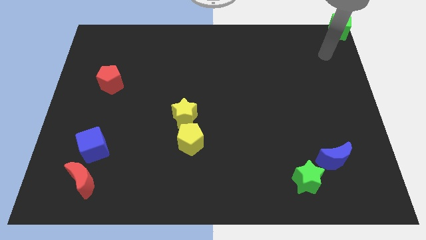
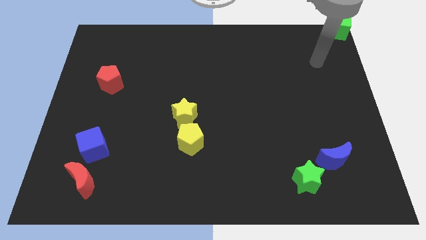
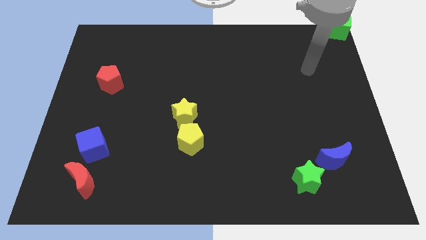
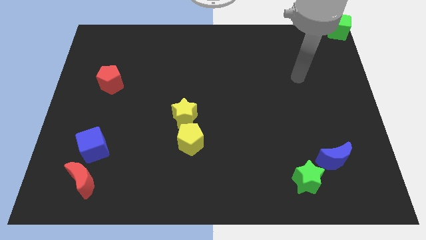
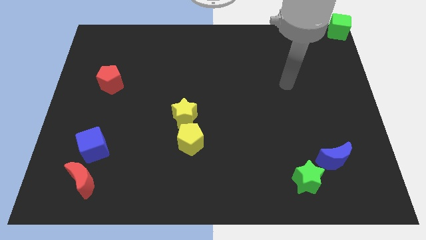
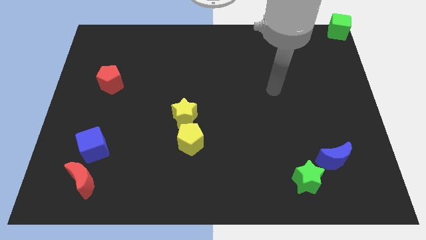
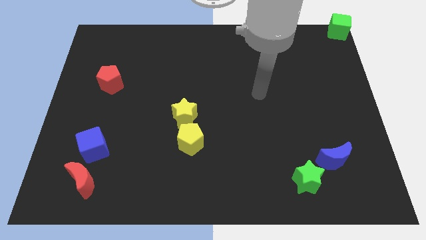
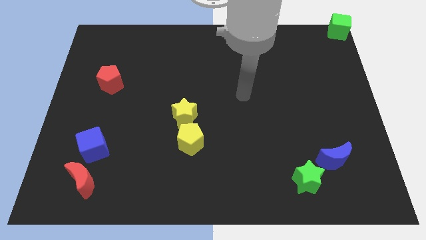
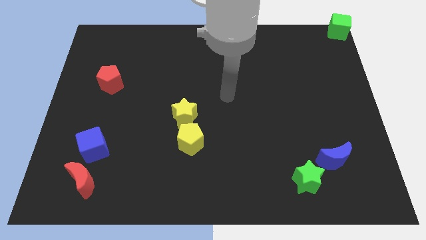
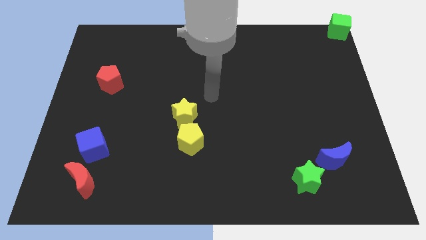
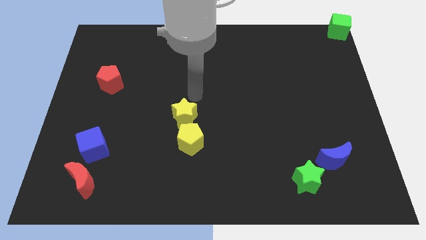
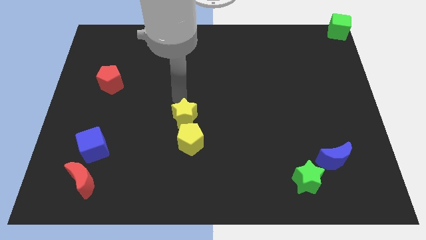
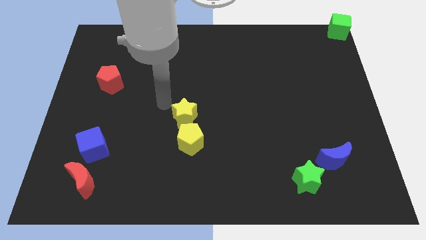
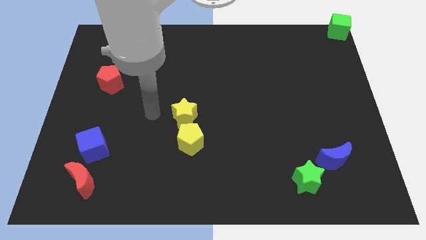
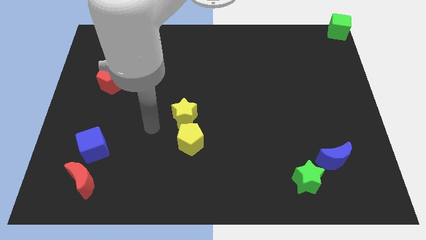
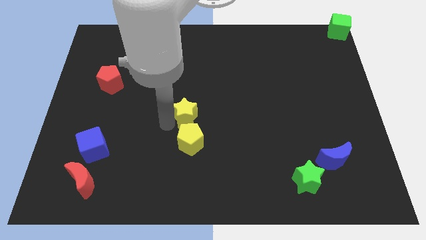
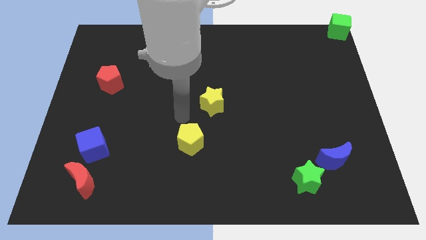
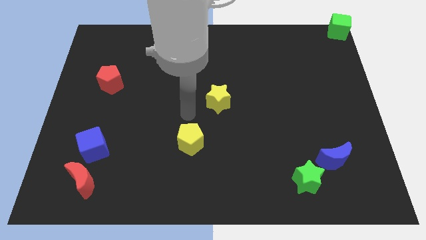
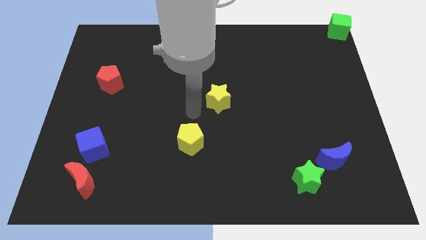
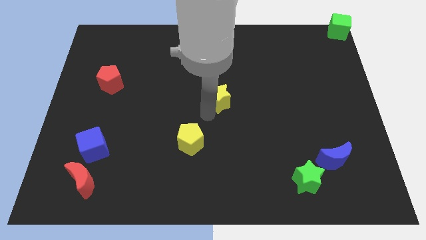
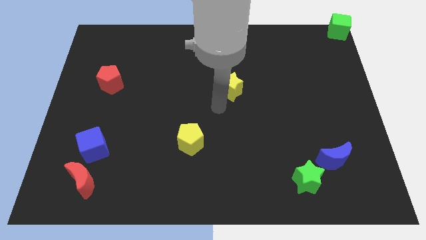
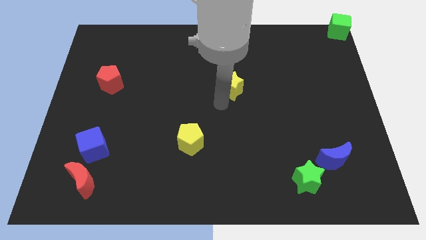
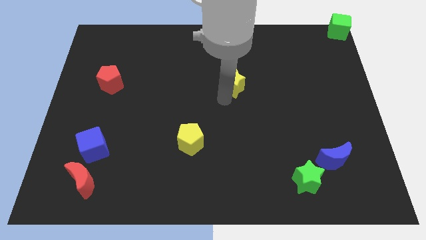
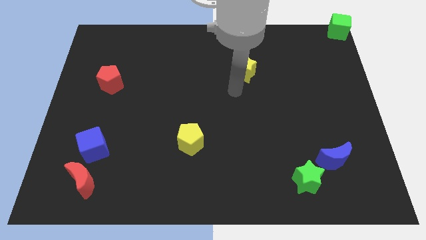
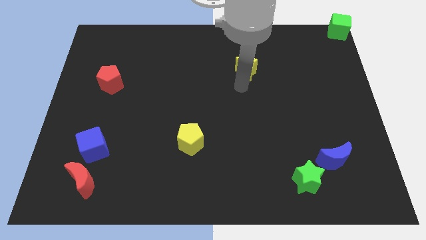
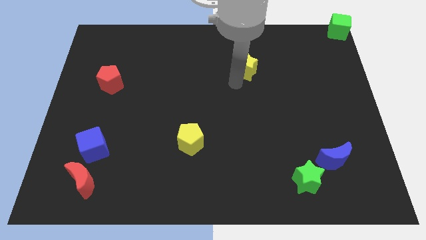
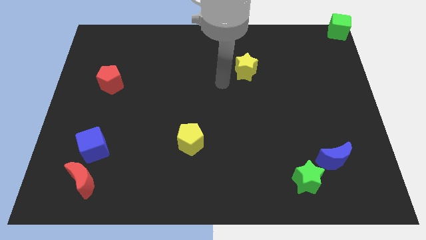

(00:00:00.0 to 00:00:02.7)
move the yellow star to the top right of the yellow pentagon

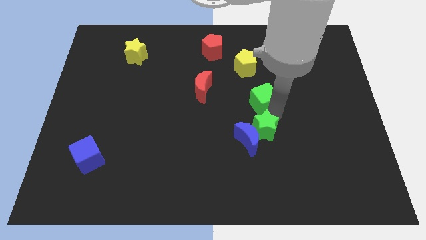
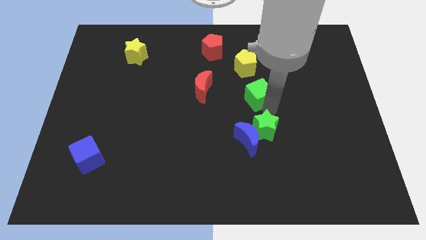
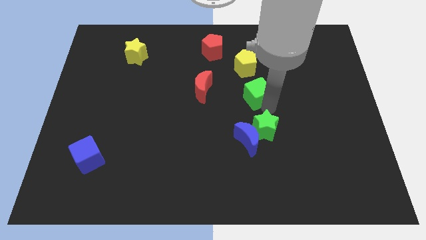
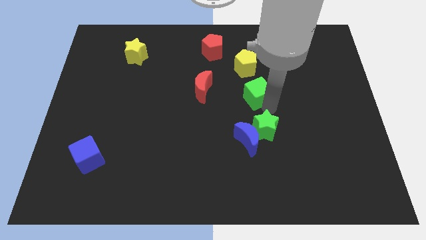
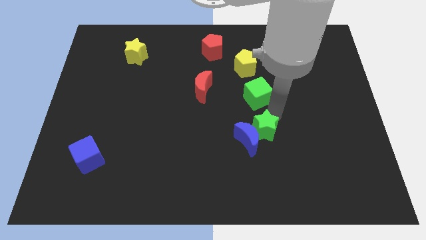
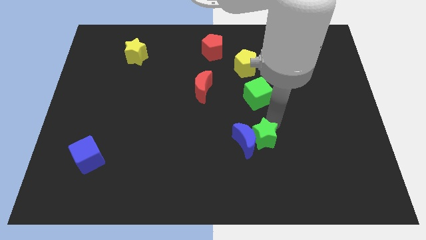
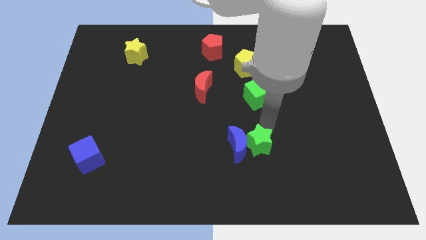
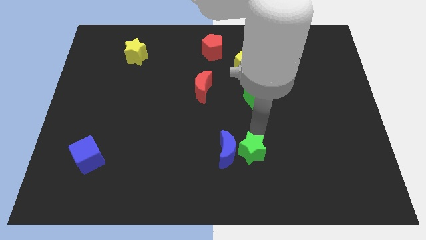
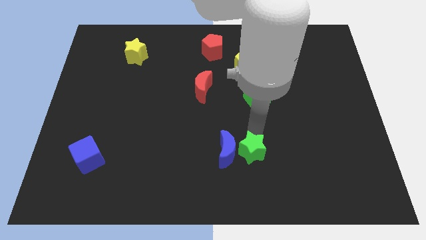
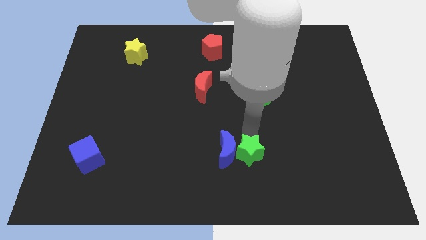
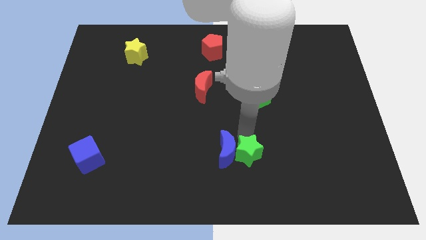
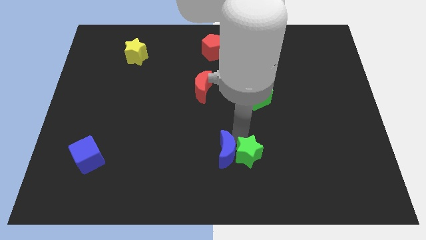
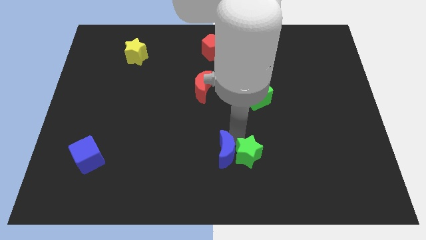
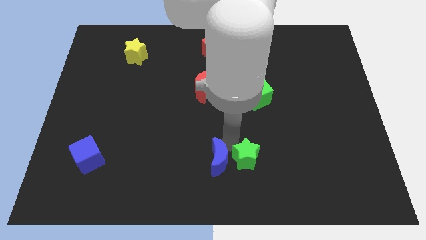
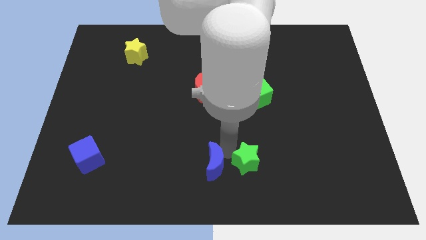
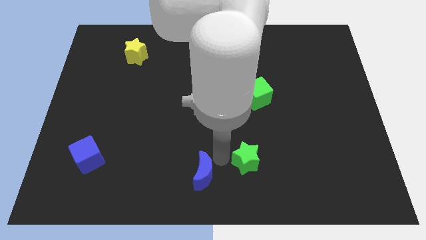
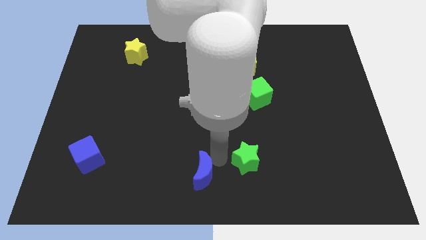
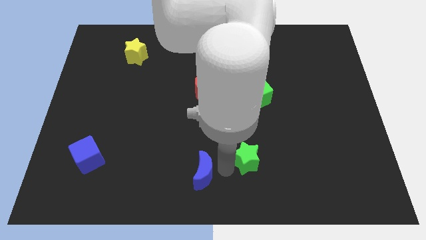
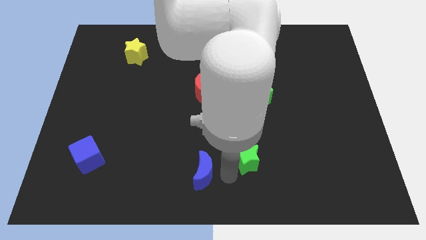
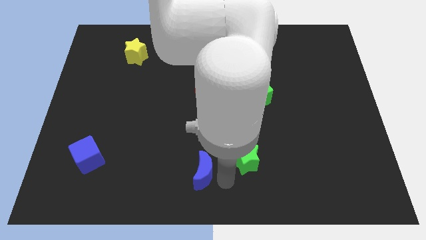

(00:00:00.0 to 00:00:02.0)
move blue crescent towards the bottom center of the board

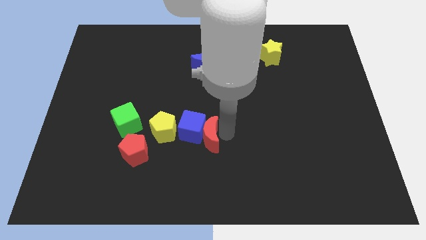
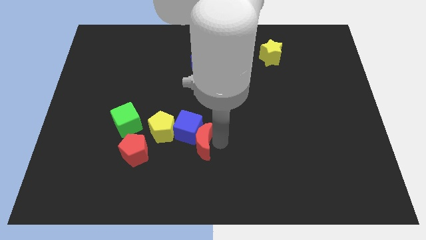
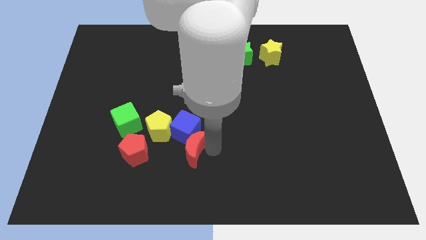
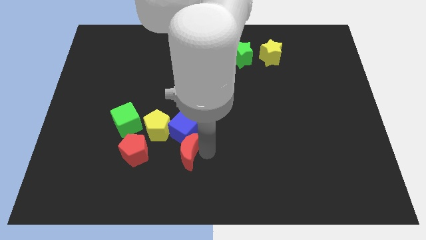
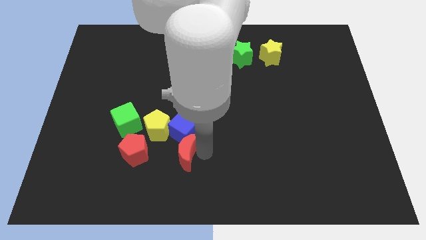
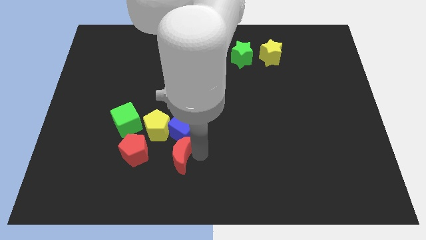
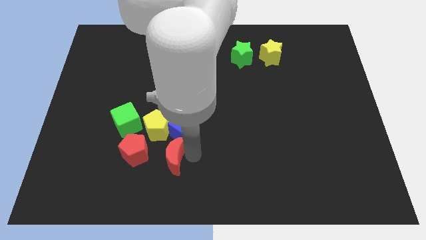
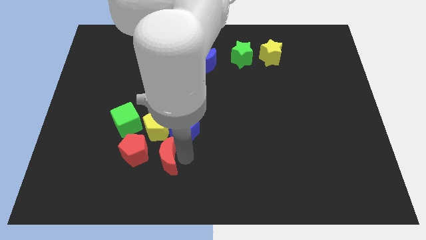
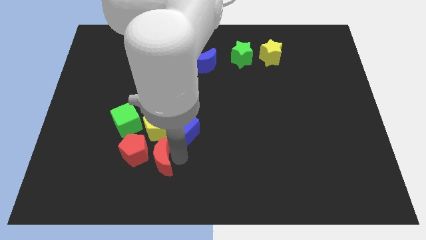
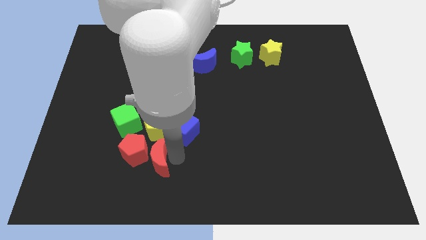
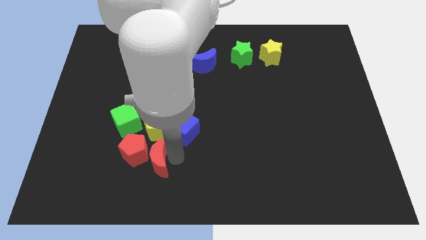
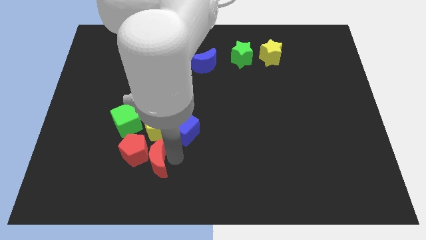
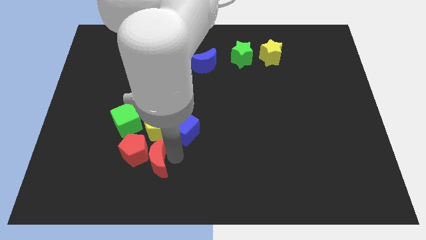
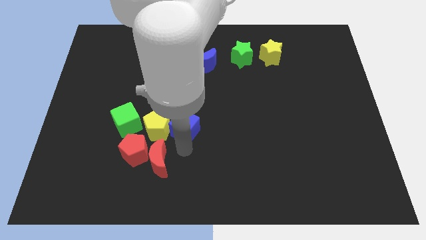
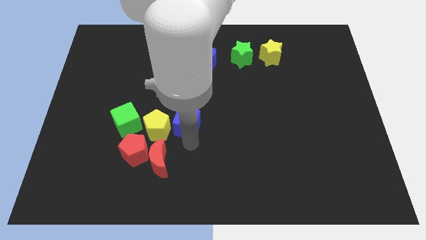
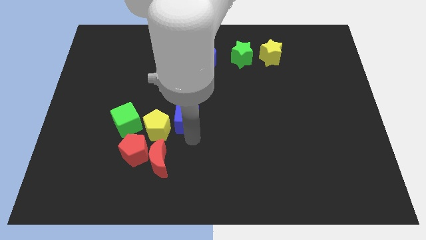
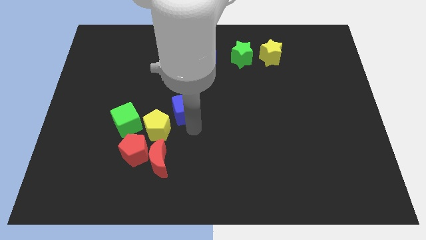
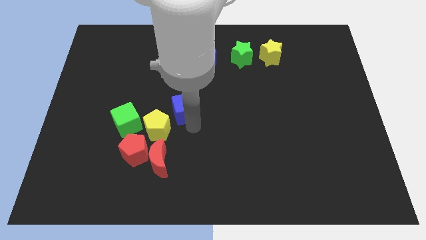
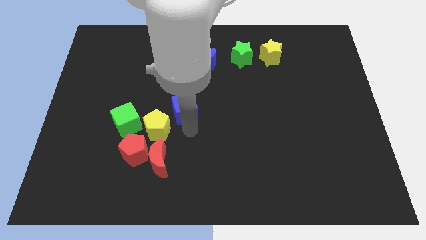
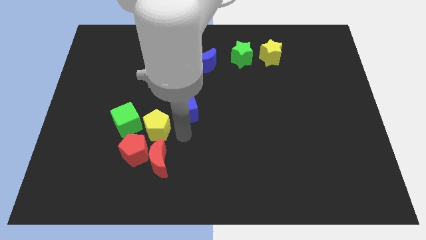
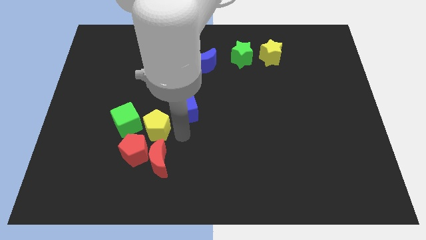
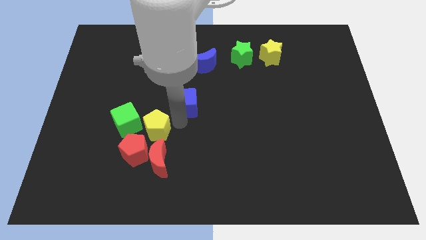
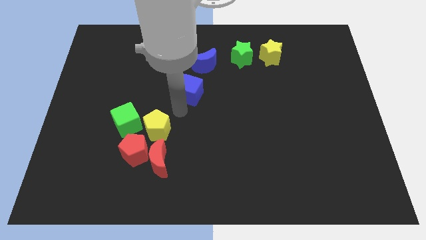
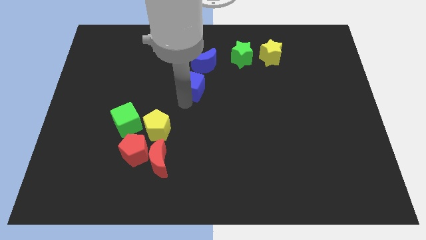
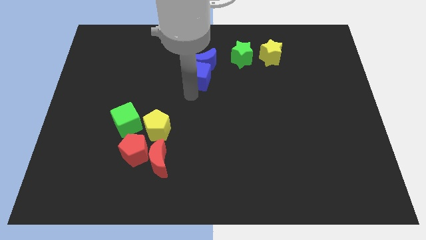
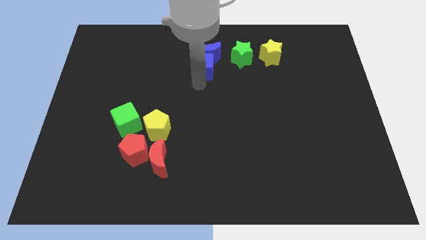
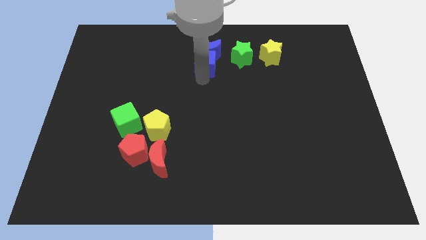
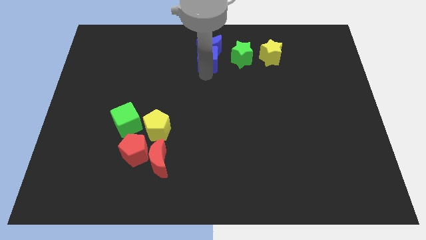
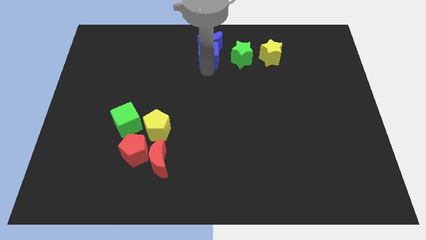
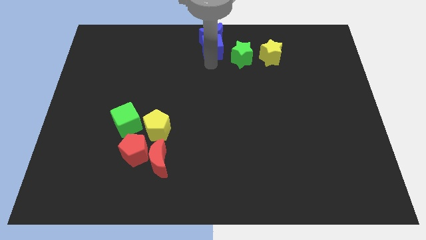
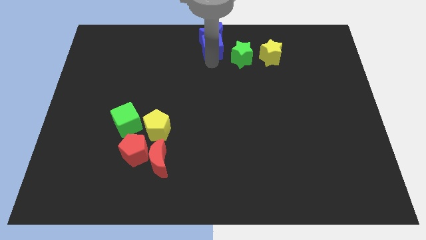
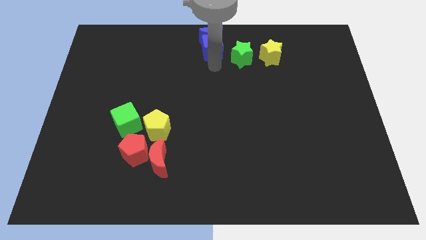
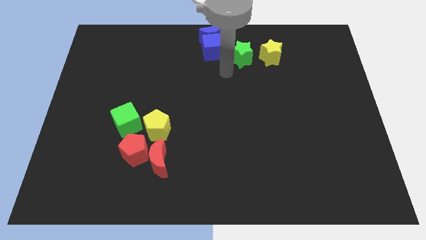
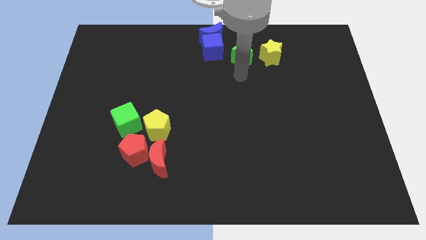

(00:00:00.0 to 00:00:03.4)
push blue cube along with blue moon to the top center

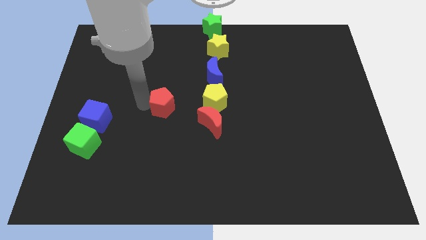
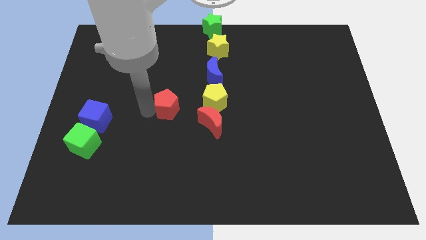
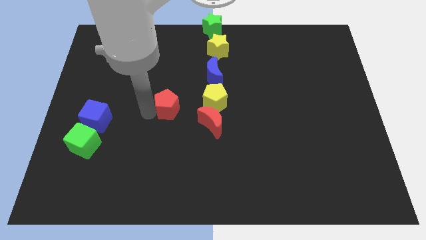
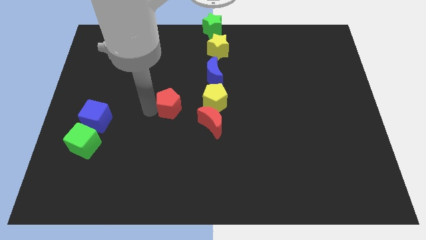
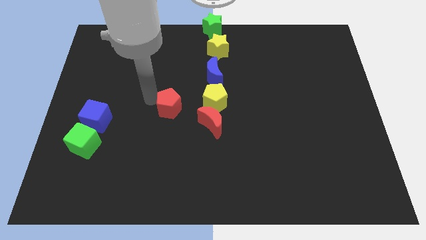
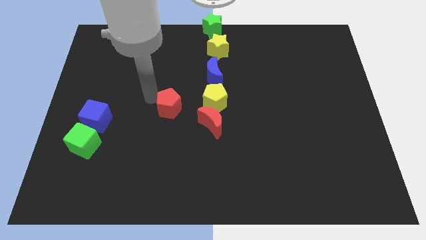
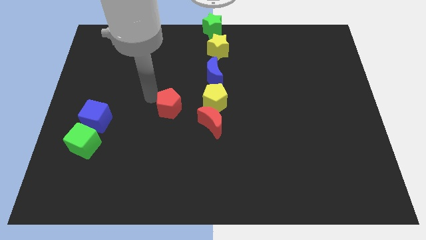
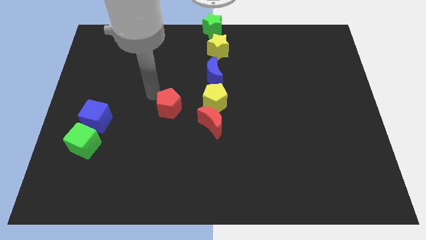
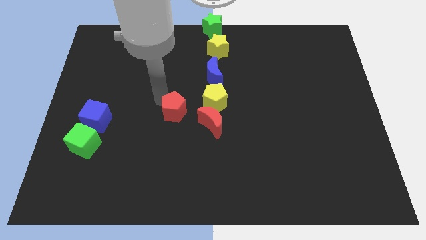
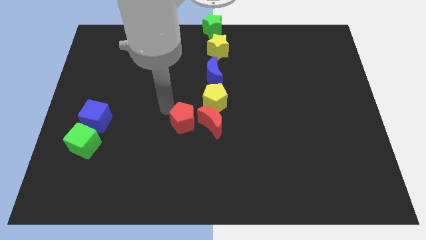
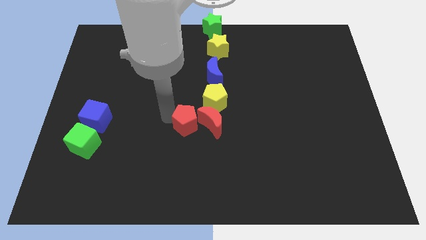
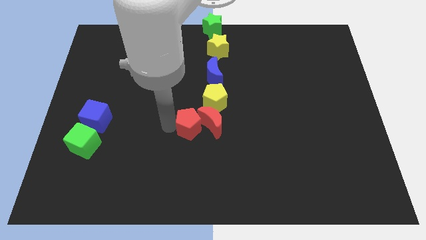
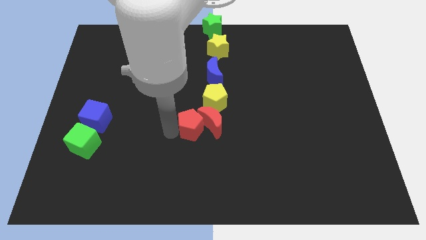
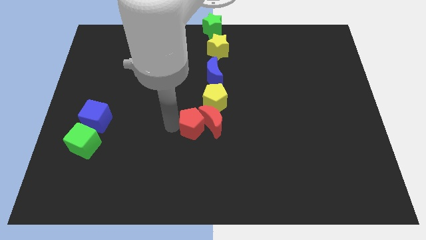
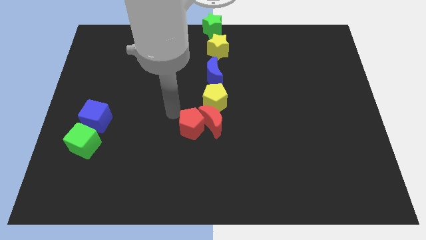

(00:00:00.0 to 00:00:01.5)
push the red pentagon to the left of the red crescent
